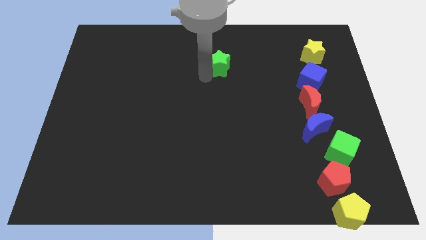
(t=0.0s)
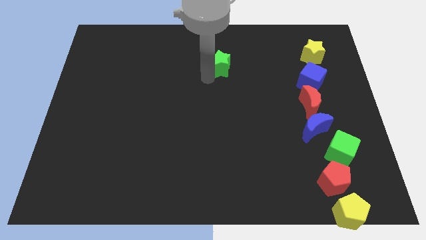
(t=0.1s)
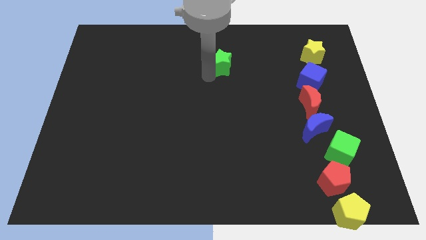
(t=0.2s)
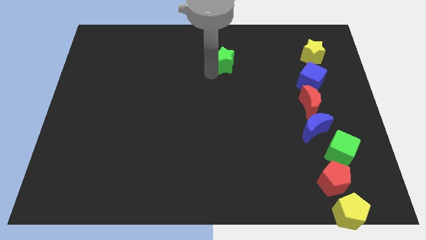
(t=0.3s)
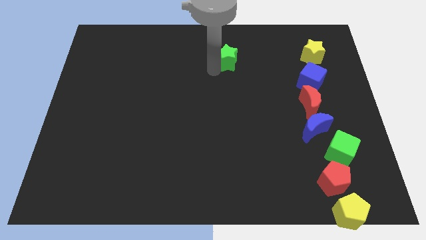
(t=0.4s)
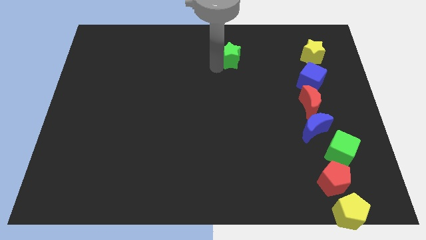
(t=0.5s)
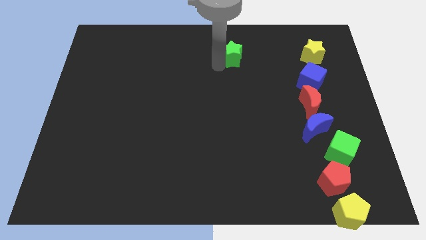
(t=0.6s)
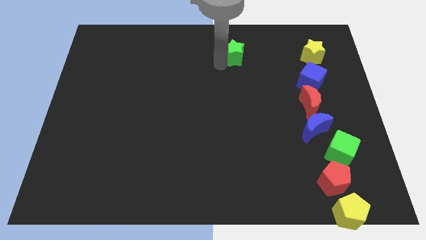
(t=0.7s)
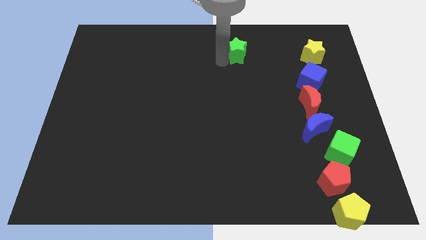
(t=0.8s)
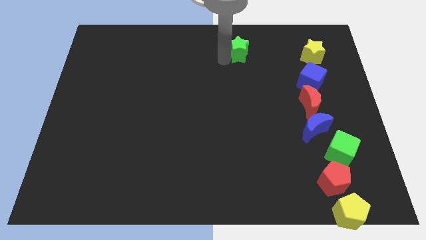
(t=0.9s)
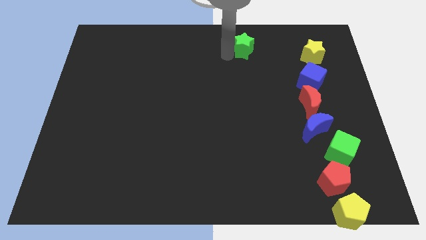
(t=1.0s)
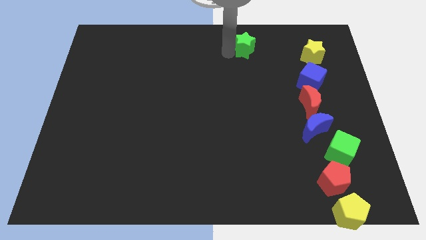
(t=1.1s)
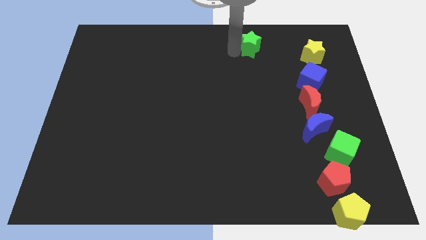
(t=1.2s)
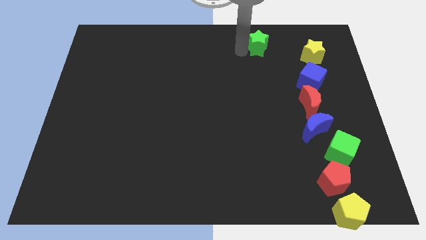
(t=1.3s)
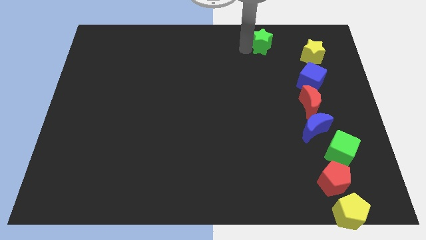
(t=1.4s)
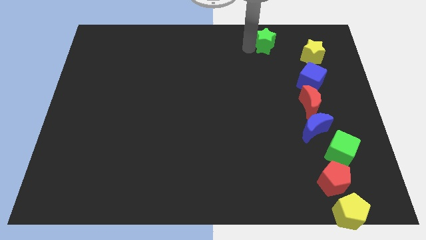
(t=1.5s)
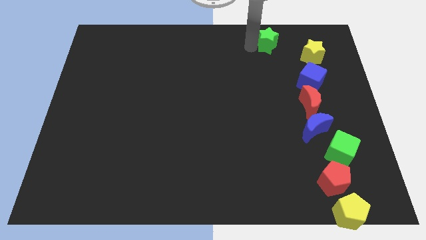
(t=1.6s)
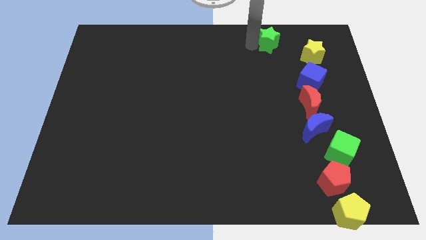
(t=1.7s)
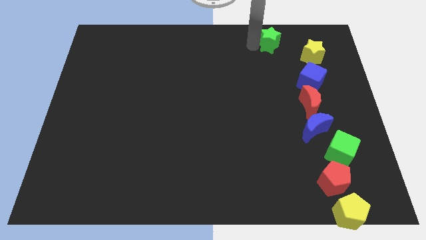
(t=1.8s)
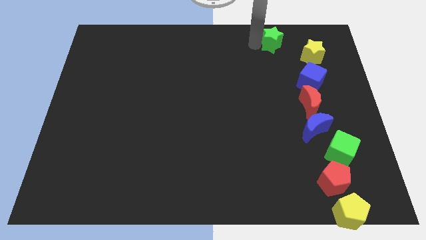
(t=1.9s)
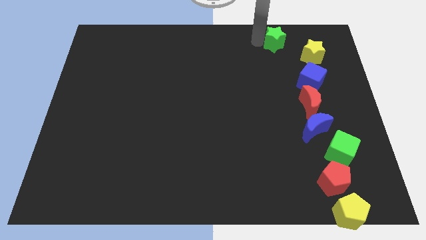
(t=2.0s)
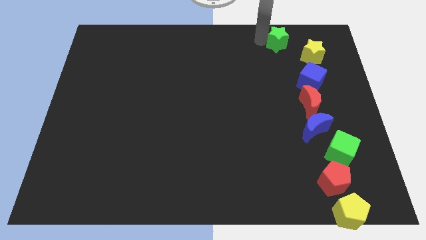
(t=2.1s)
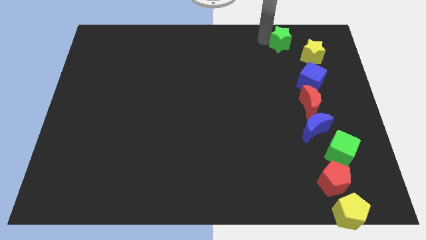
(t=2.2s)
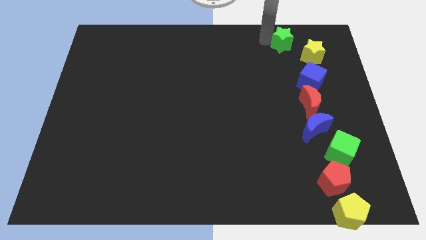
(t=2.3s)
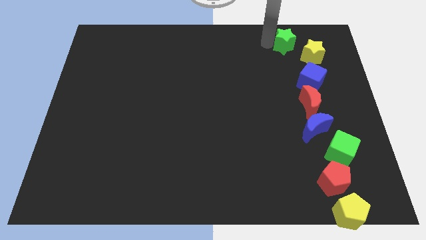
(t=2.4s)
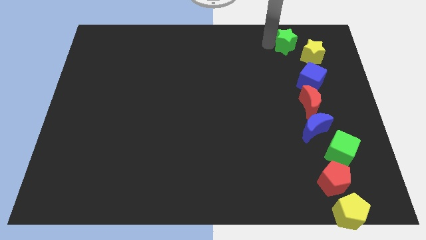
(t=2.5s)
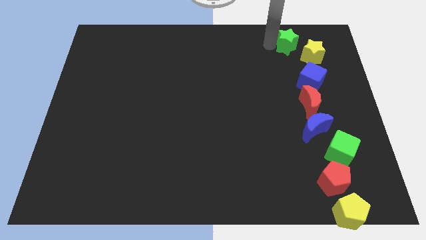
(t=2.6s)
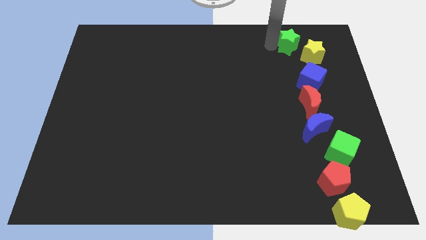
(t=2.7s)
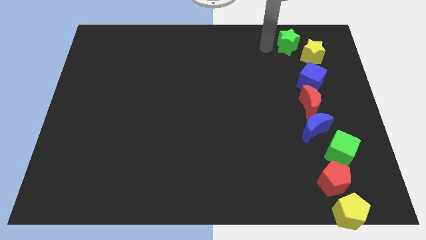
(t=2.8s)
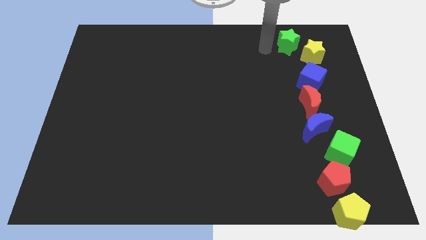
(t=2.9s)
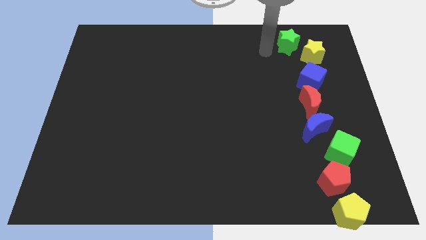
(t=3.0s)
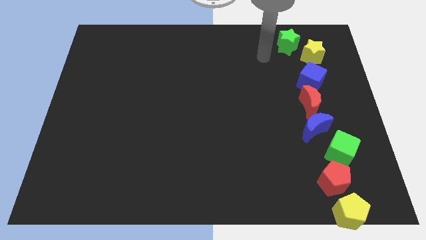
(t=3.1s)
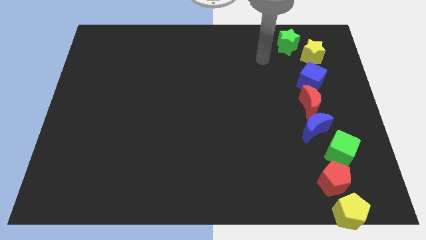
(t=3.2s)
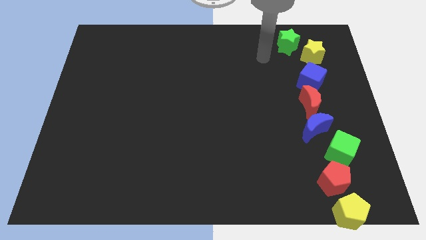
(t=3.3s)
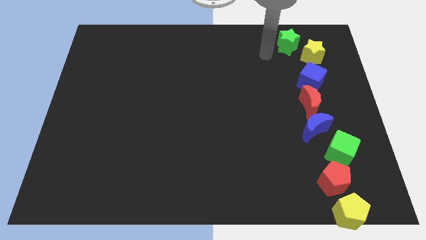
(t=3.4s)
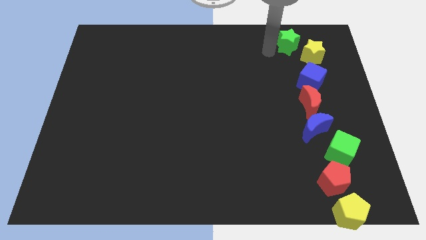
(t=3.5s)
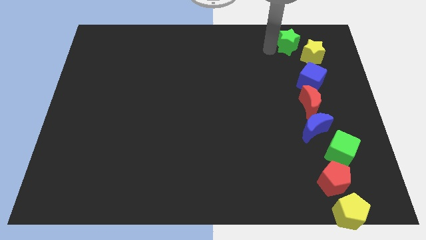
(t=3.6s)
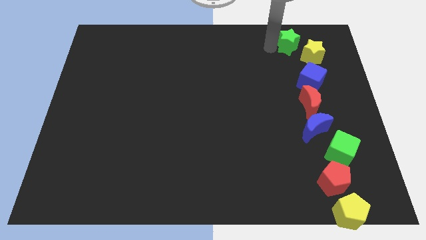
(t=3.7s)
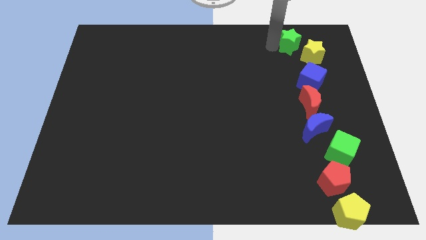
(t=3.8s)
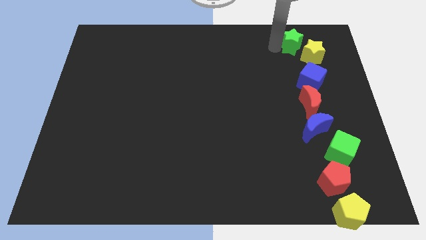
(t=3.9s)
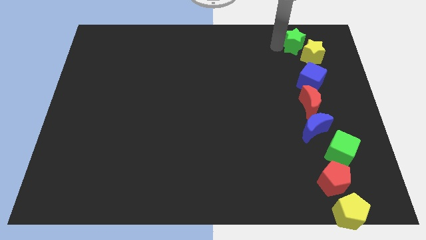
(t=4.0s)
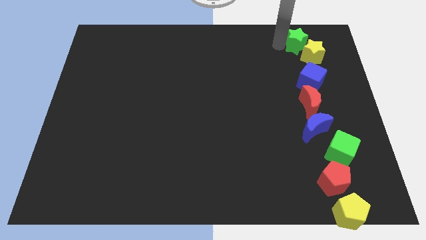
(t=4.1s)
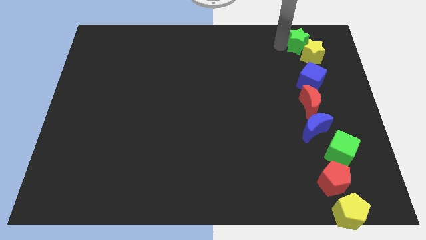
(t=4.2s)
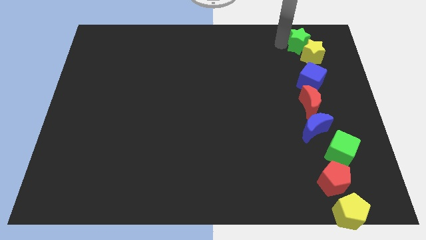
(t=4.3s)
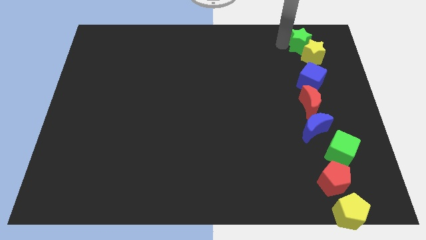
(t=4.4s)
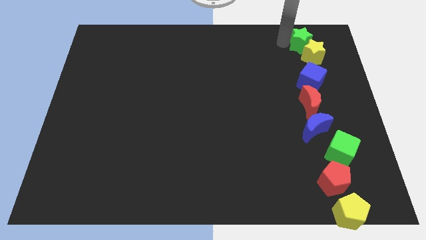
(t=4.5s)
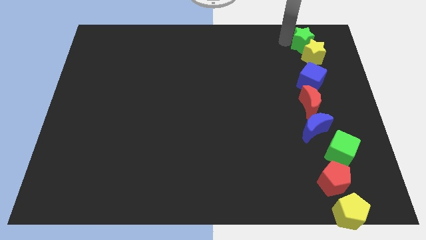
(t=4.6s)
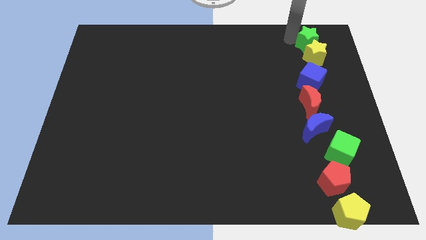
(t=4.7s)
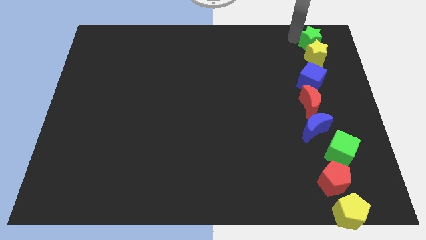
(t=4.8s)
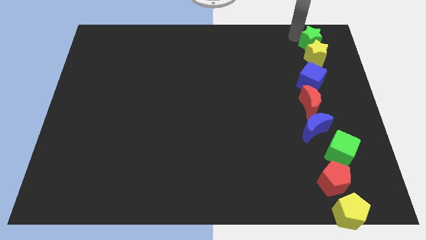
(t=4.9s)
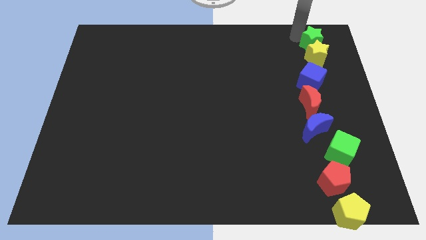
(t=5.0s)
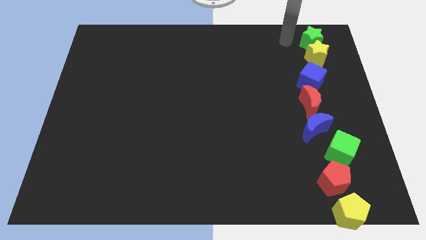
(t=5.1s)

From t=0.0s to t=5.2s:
push the green star to the top of the yellow star

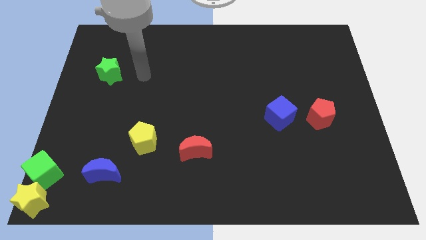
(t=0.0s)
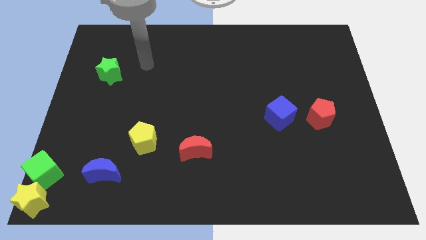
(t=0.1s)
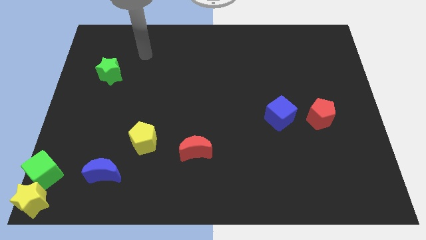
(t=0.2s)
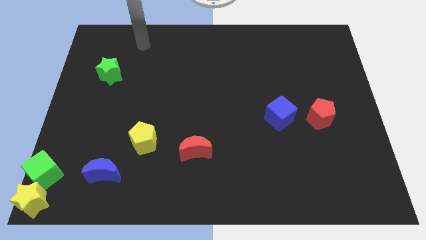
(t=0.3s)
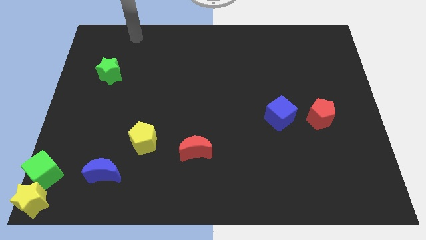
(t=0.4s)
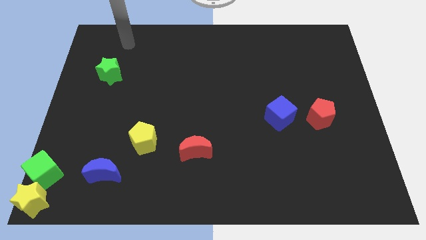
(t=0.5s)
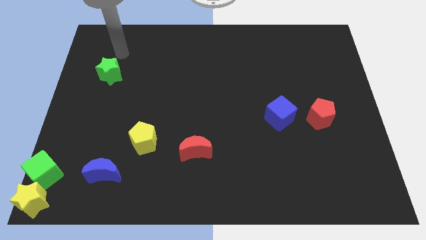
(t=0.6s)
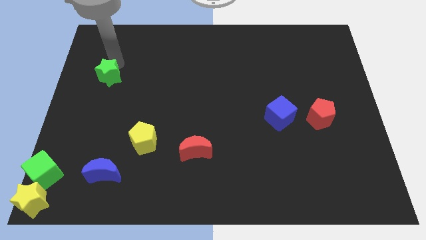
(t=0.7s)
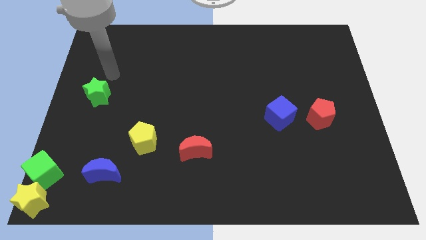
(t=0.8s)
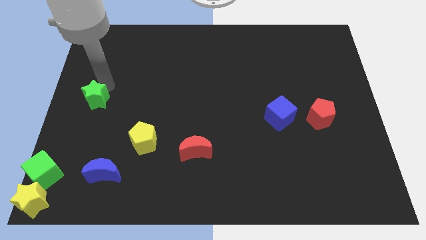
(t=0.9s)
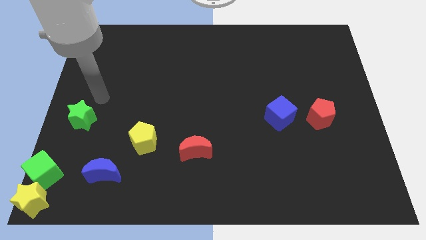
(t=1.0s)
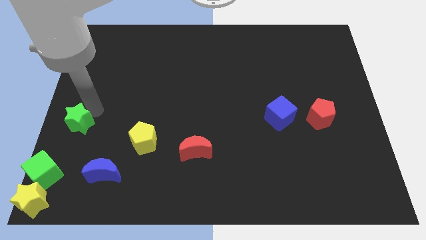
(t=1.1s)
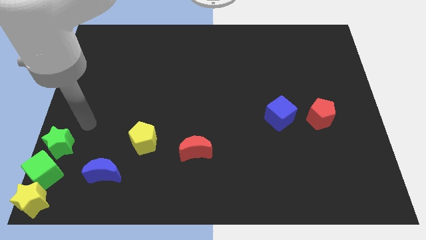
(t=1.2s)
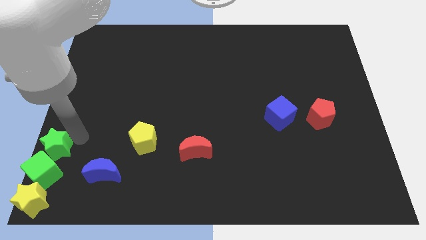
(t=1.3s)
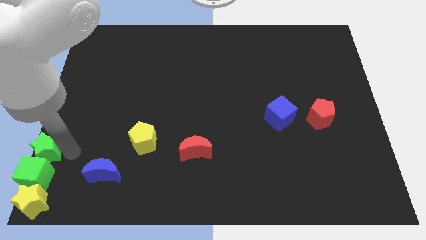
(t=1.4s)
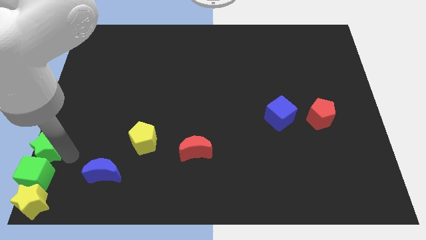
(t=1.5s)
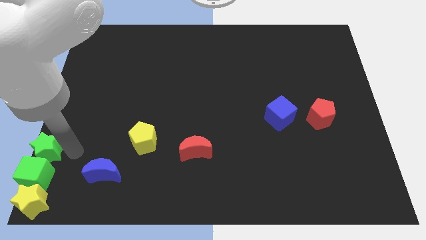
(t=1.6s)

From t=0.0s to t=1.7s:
push the green star to tht top of the green cube

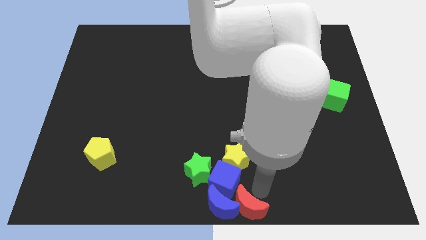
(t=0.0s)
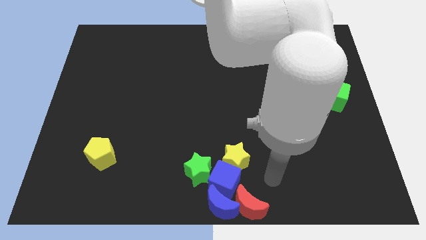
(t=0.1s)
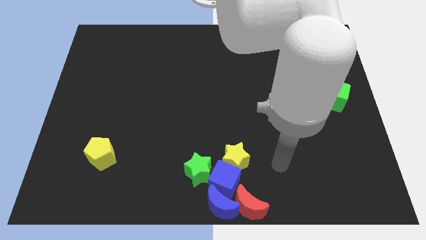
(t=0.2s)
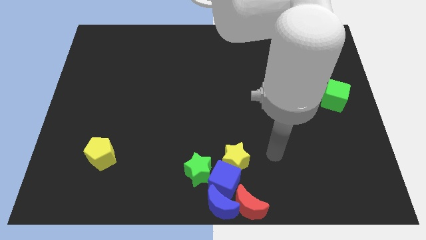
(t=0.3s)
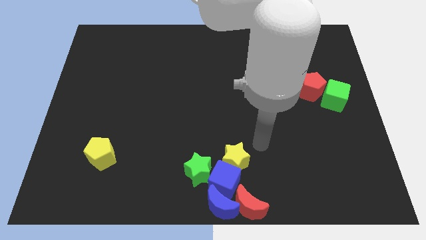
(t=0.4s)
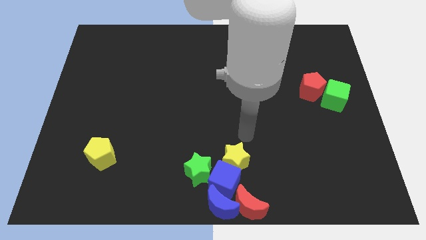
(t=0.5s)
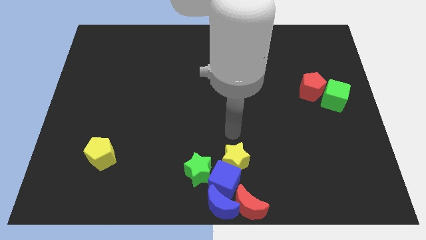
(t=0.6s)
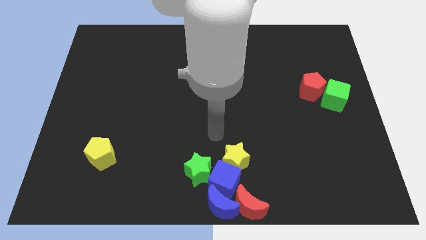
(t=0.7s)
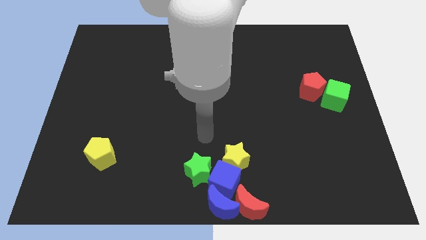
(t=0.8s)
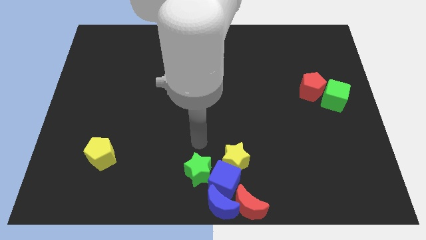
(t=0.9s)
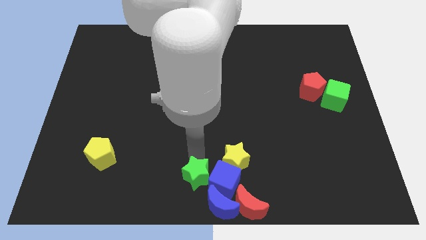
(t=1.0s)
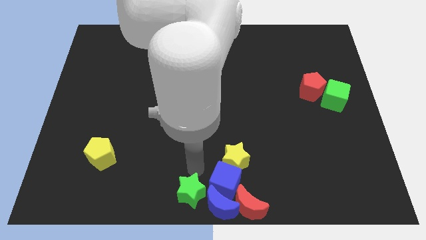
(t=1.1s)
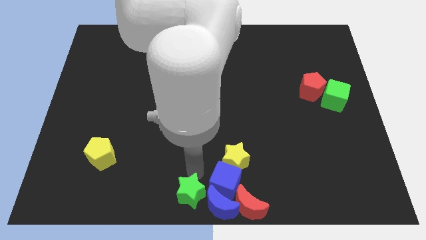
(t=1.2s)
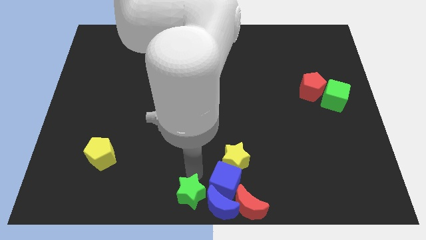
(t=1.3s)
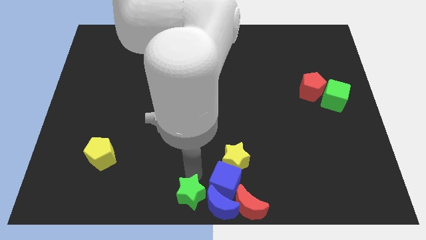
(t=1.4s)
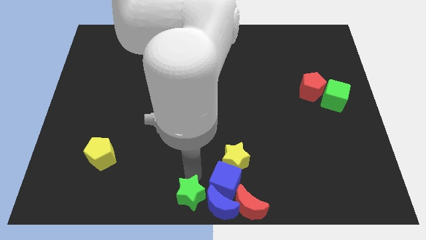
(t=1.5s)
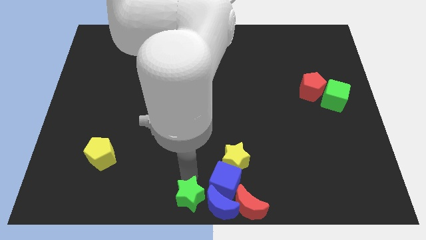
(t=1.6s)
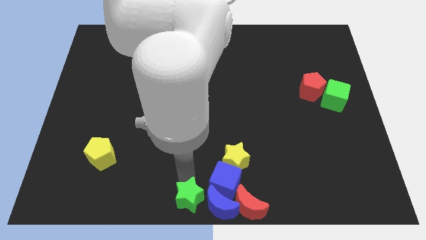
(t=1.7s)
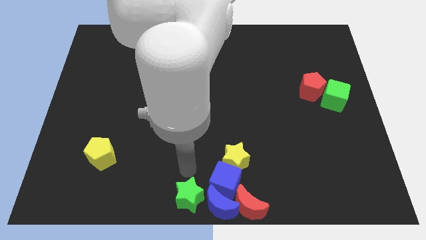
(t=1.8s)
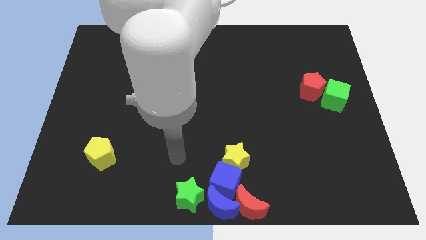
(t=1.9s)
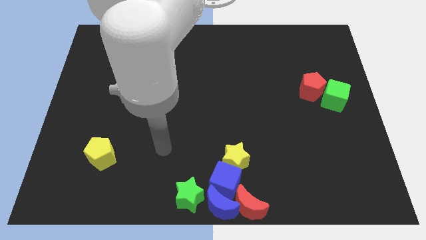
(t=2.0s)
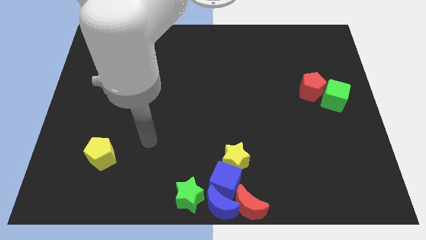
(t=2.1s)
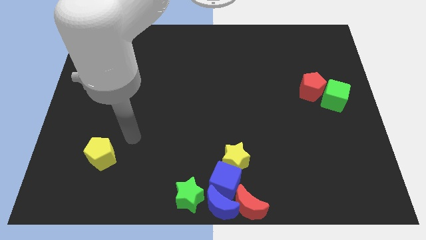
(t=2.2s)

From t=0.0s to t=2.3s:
push the green star to the left of blue moon at the bottom
